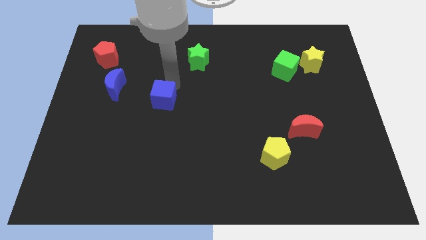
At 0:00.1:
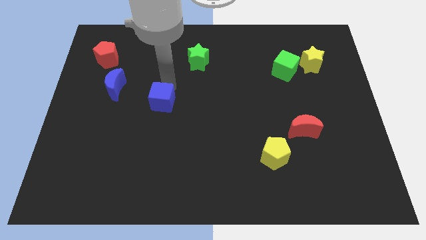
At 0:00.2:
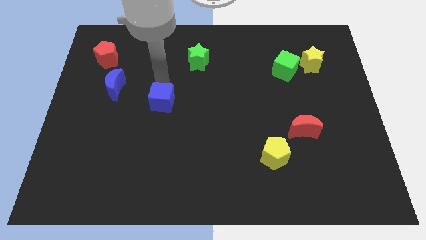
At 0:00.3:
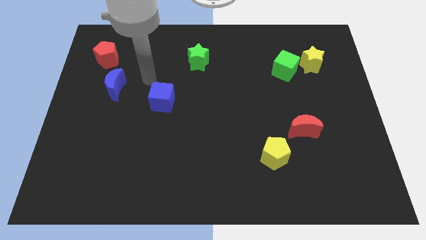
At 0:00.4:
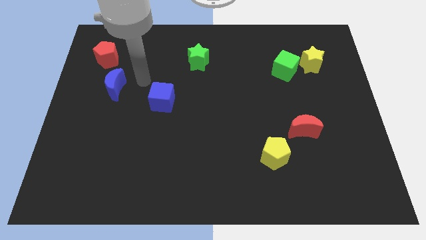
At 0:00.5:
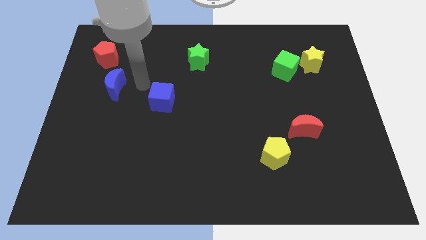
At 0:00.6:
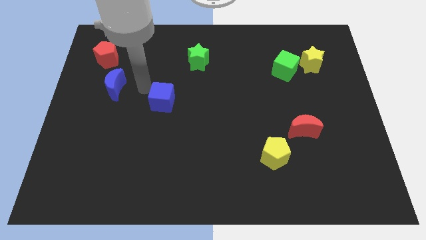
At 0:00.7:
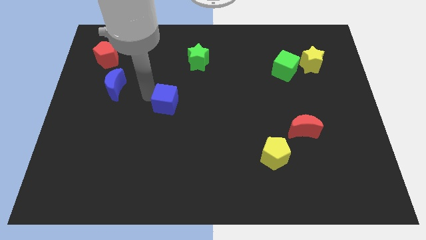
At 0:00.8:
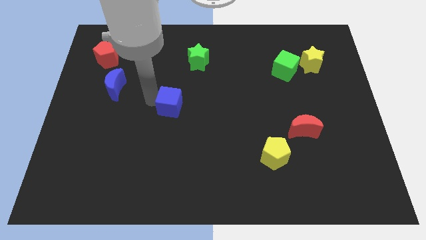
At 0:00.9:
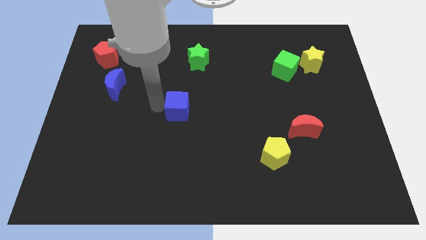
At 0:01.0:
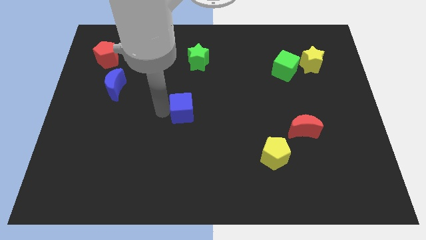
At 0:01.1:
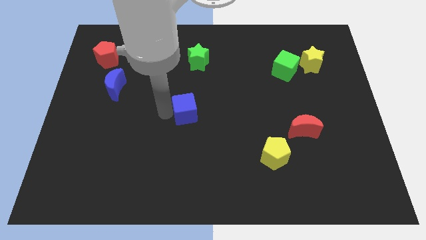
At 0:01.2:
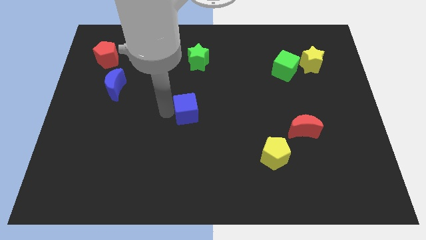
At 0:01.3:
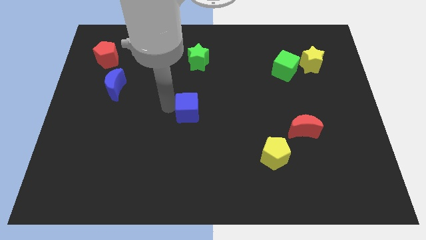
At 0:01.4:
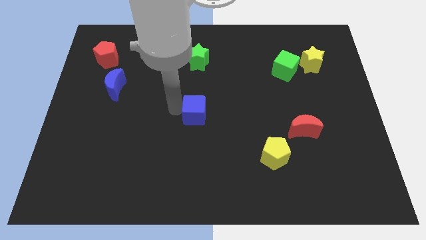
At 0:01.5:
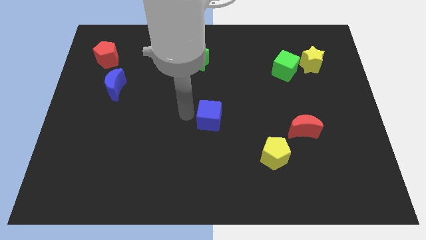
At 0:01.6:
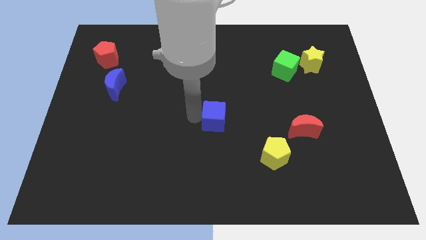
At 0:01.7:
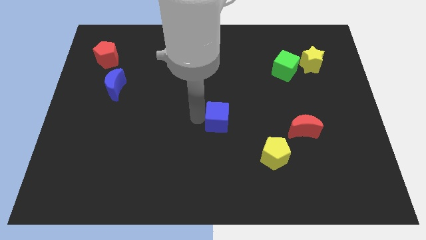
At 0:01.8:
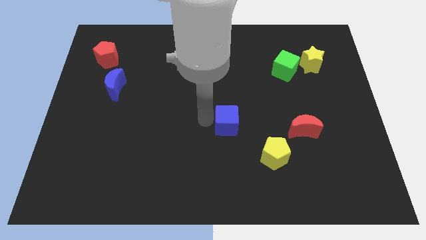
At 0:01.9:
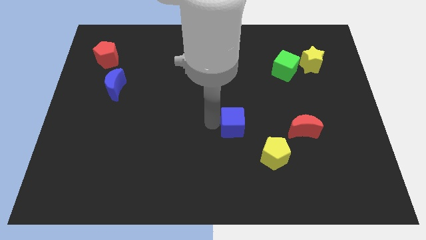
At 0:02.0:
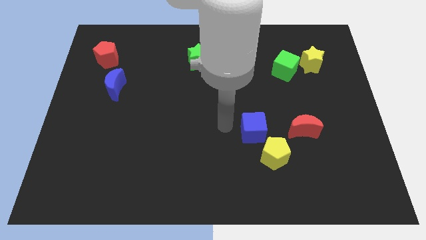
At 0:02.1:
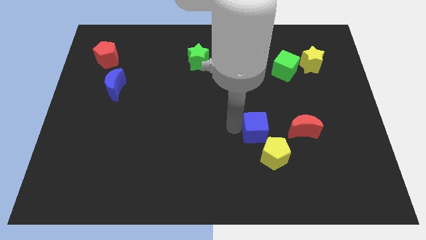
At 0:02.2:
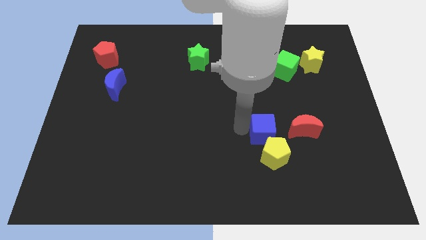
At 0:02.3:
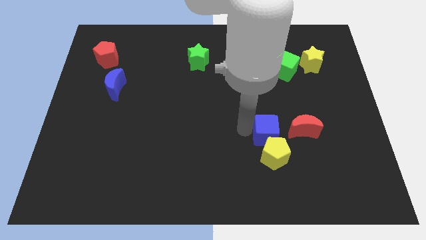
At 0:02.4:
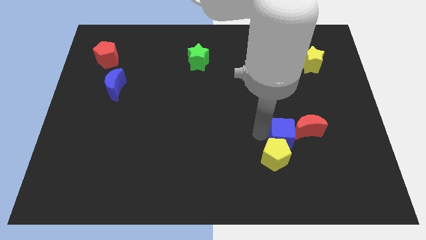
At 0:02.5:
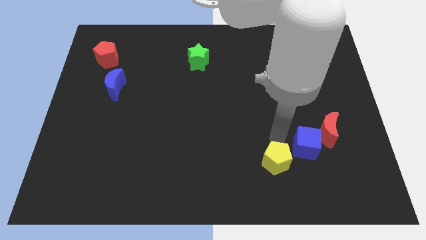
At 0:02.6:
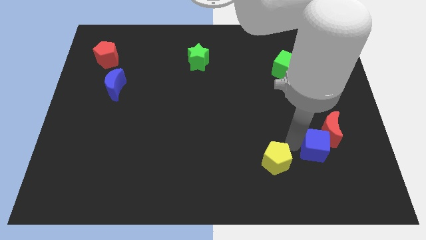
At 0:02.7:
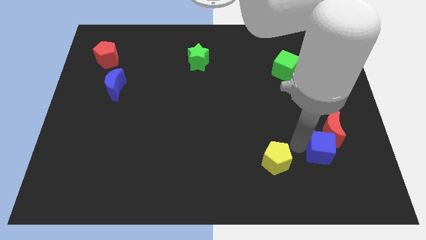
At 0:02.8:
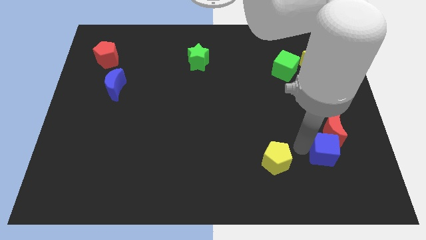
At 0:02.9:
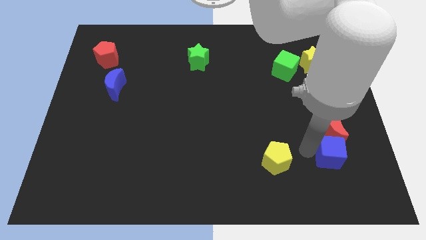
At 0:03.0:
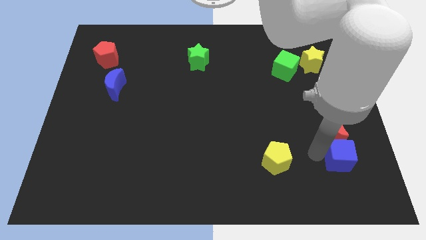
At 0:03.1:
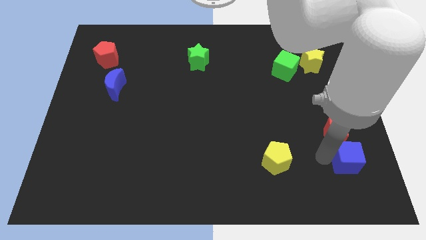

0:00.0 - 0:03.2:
push blue cube below red crescent

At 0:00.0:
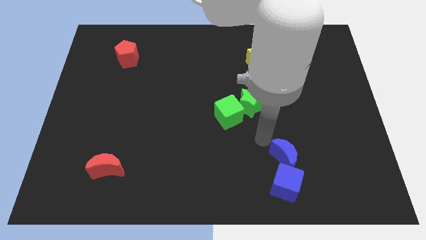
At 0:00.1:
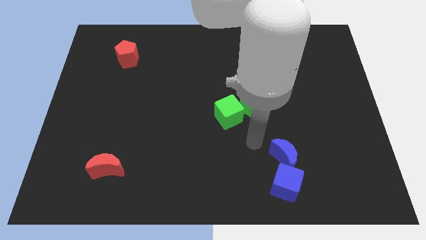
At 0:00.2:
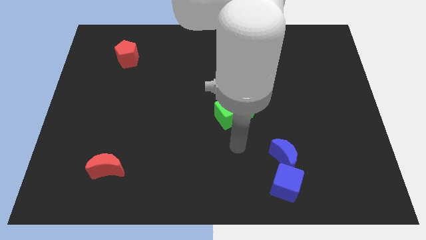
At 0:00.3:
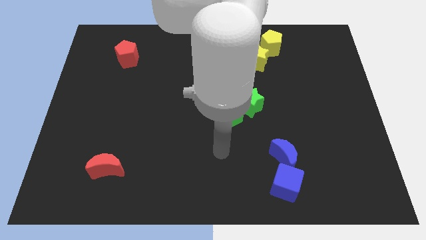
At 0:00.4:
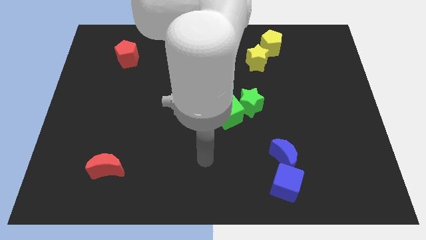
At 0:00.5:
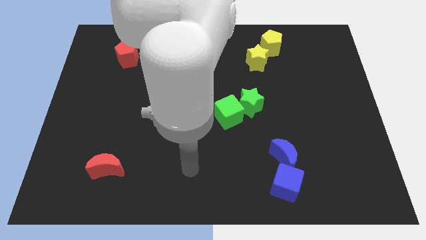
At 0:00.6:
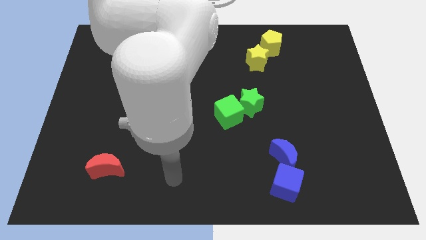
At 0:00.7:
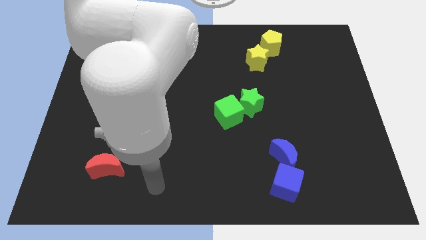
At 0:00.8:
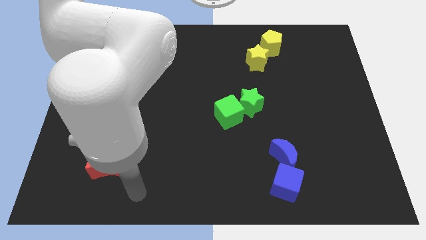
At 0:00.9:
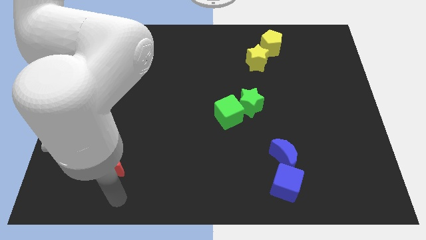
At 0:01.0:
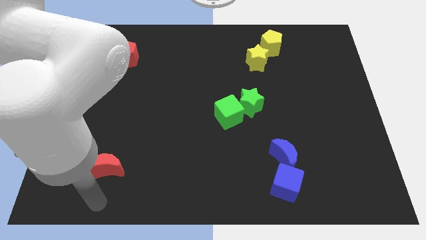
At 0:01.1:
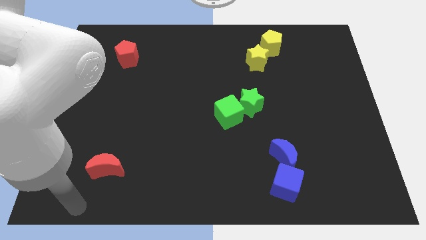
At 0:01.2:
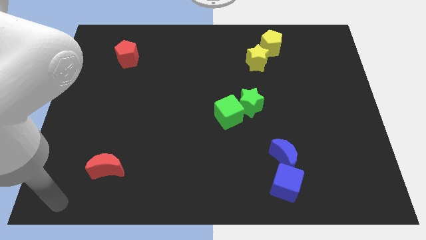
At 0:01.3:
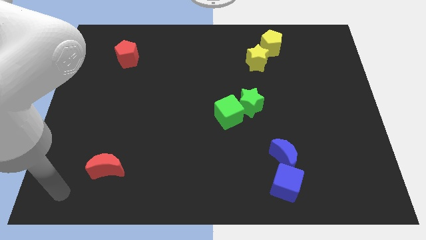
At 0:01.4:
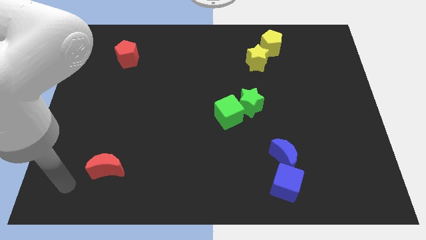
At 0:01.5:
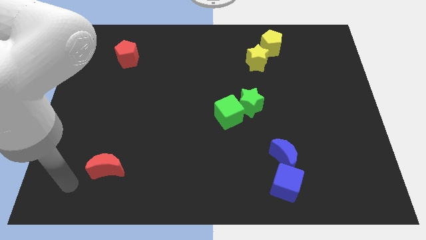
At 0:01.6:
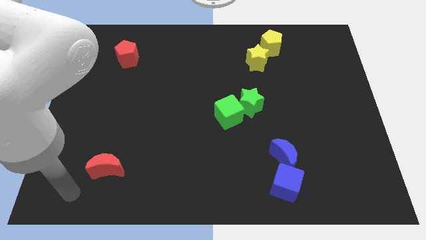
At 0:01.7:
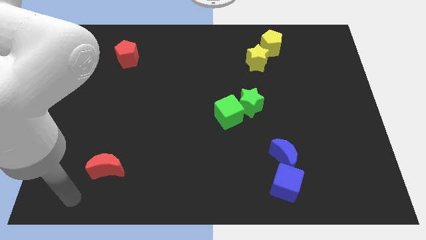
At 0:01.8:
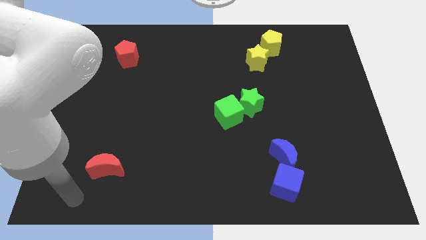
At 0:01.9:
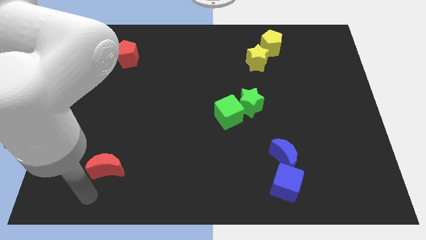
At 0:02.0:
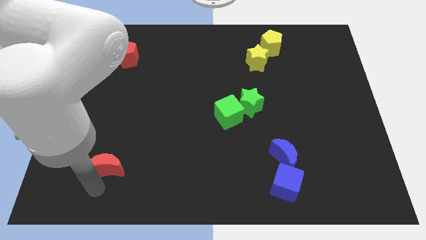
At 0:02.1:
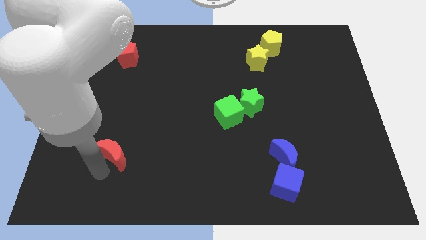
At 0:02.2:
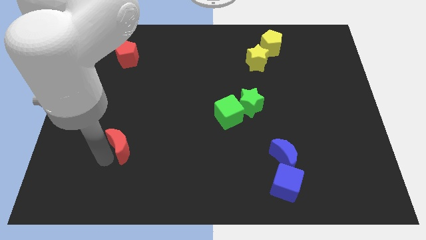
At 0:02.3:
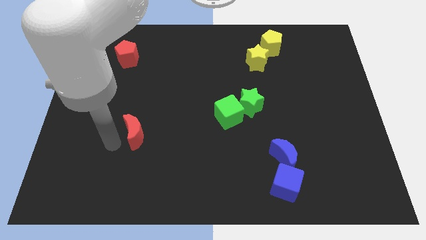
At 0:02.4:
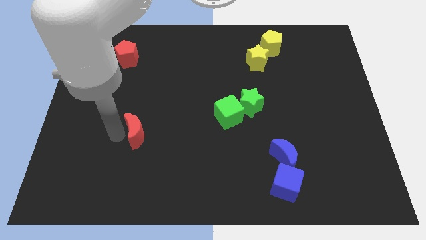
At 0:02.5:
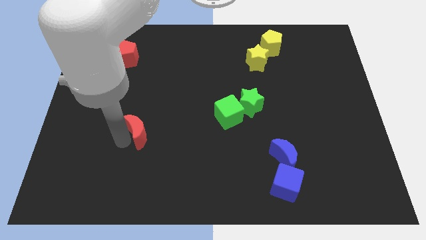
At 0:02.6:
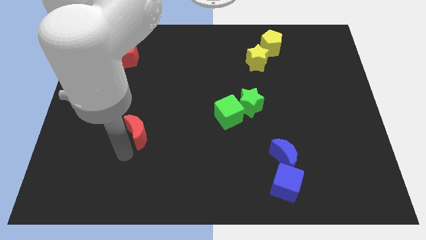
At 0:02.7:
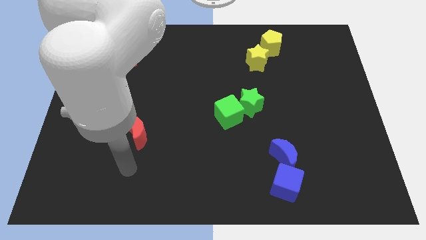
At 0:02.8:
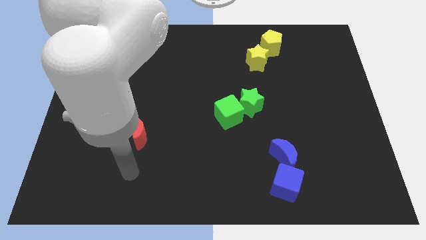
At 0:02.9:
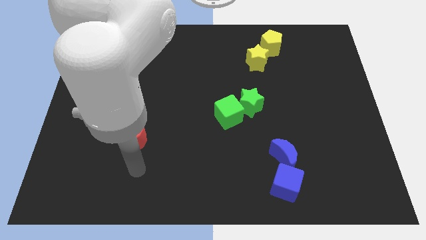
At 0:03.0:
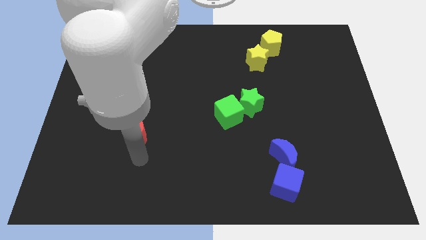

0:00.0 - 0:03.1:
drag the red crescent upwards

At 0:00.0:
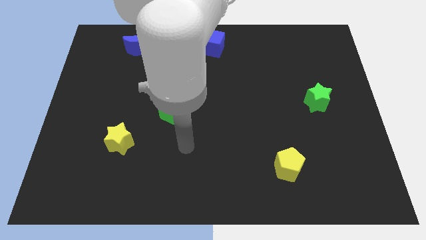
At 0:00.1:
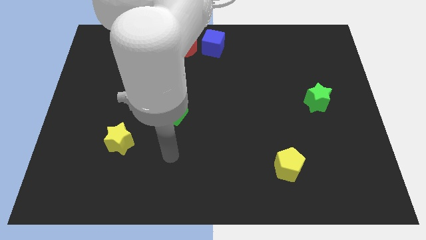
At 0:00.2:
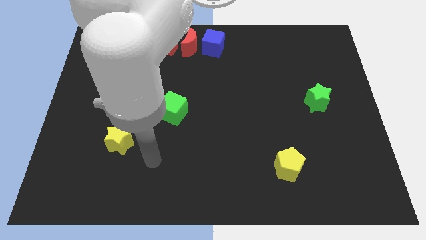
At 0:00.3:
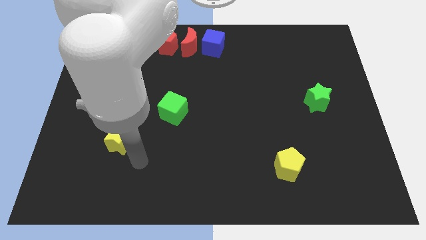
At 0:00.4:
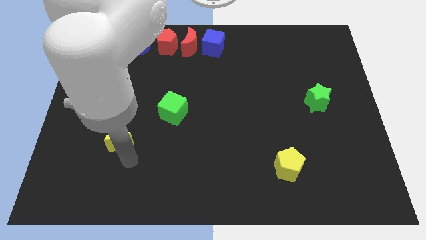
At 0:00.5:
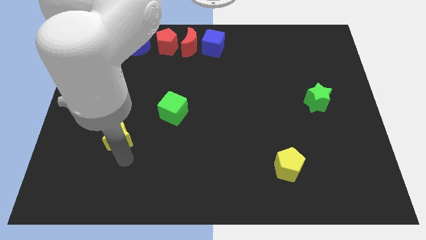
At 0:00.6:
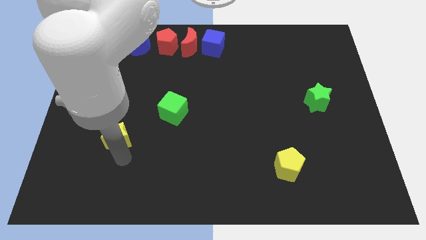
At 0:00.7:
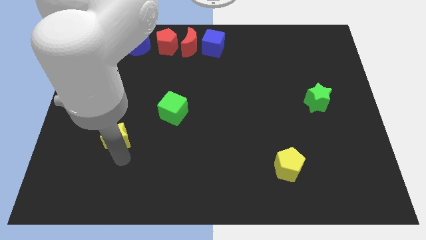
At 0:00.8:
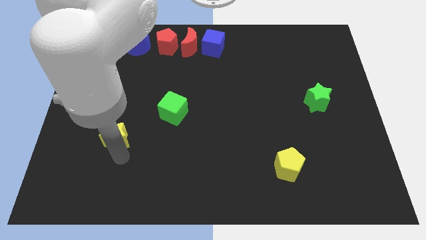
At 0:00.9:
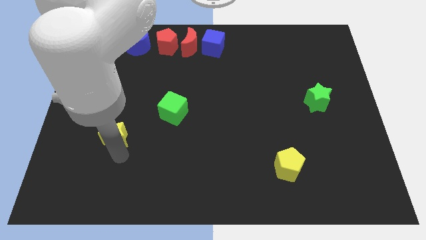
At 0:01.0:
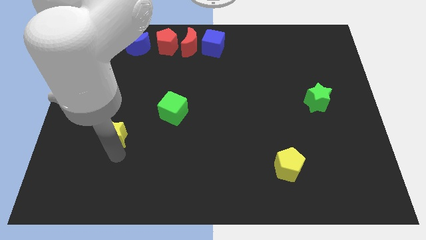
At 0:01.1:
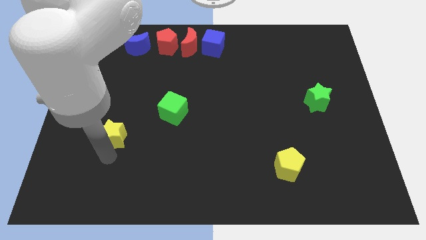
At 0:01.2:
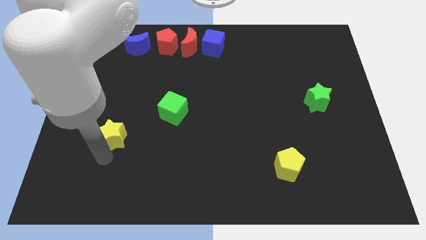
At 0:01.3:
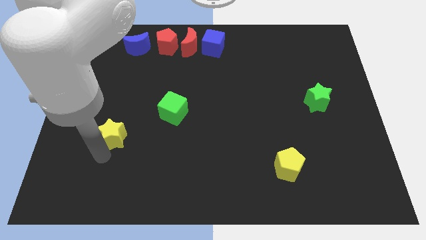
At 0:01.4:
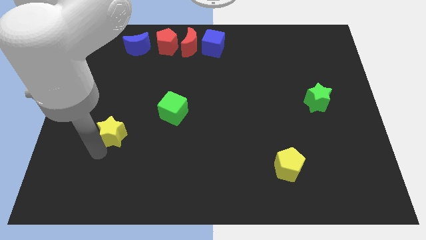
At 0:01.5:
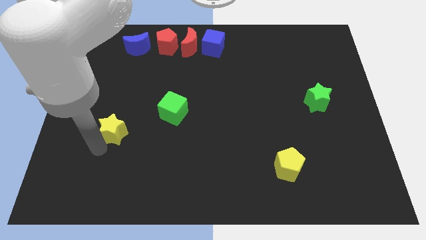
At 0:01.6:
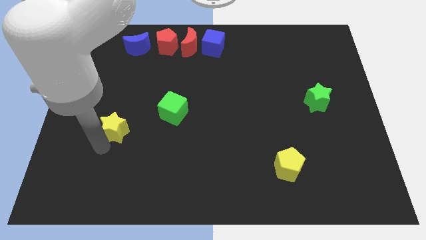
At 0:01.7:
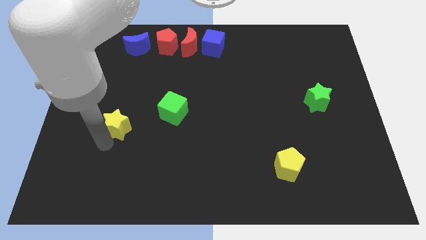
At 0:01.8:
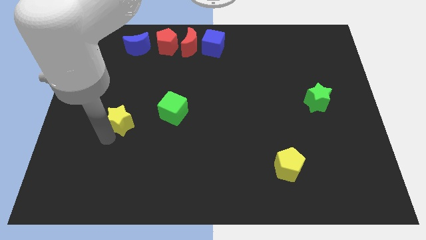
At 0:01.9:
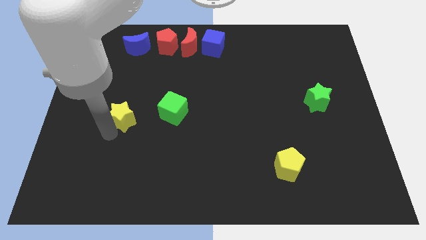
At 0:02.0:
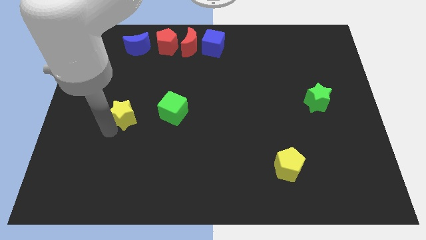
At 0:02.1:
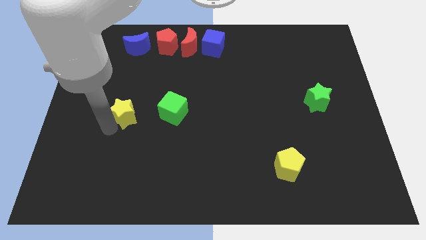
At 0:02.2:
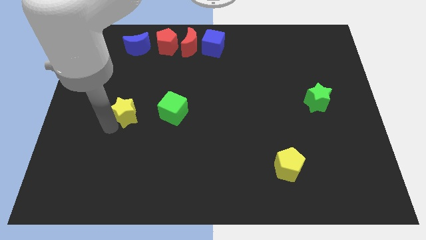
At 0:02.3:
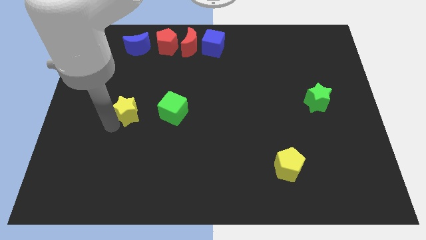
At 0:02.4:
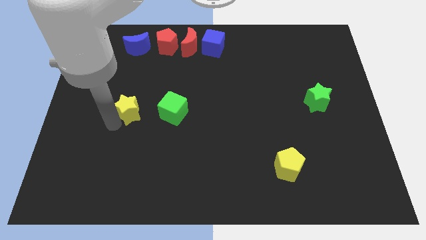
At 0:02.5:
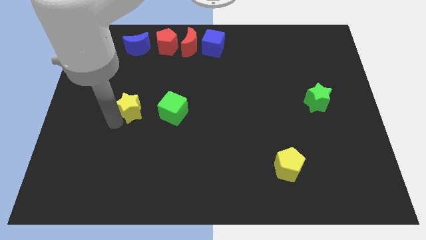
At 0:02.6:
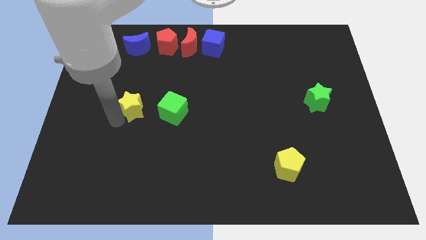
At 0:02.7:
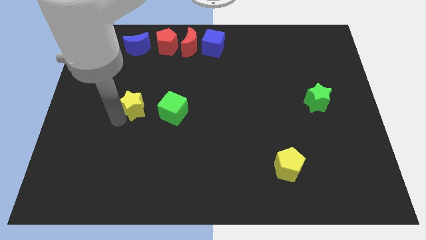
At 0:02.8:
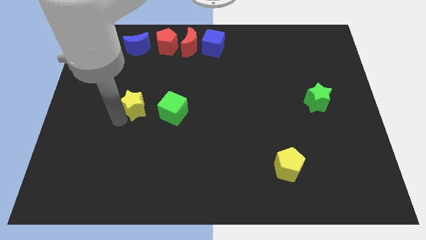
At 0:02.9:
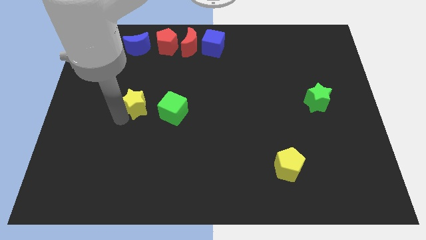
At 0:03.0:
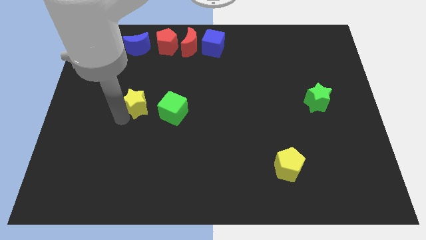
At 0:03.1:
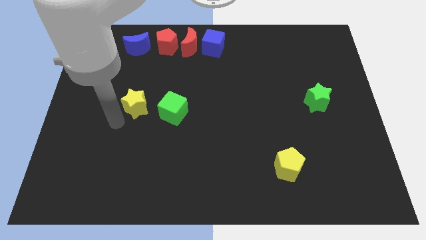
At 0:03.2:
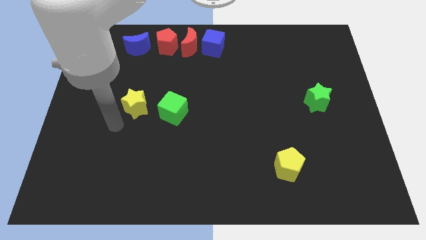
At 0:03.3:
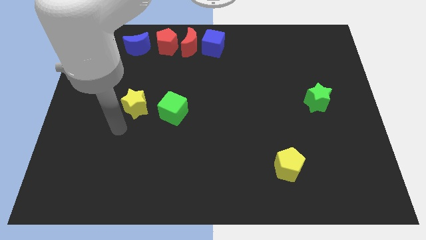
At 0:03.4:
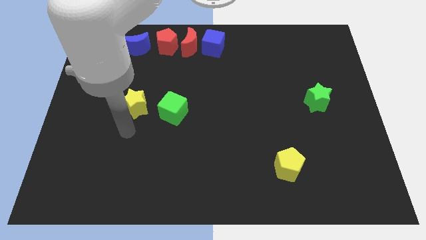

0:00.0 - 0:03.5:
move the yellow star near to the green cube